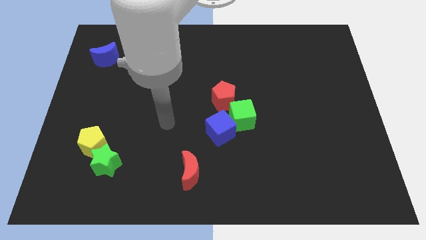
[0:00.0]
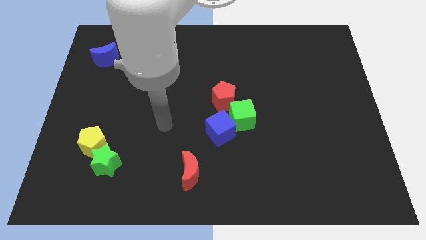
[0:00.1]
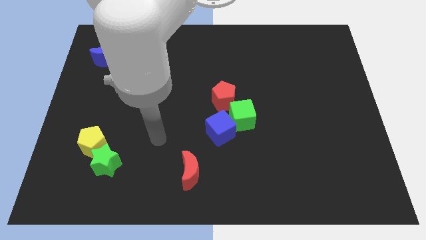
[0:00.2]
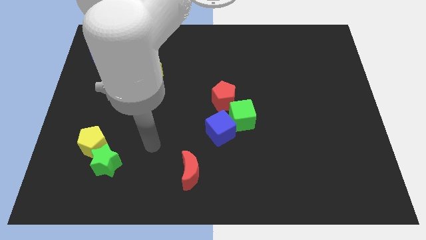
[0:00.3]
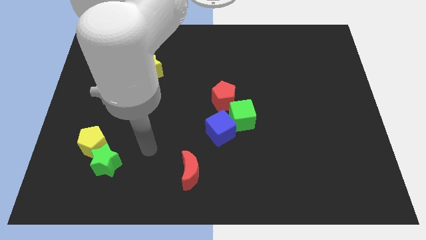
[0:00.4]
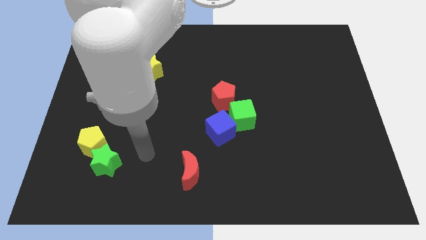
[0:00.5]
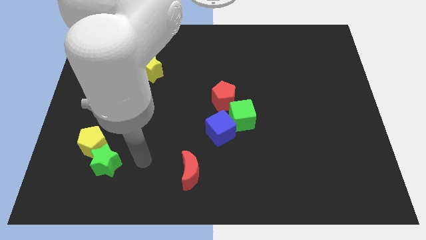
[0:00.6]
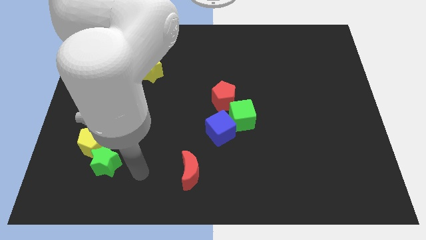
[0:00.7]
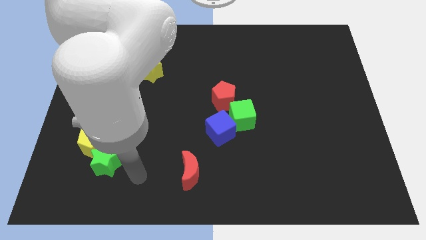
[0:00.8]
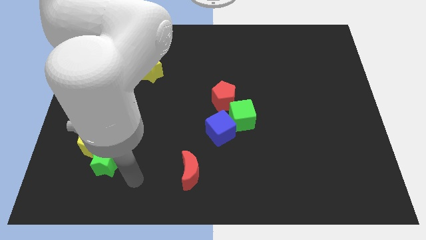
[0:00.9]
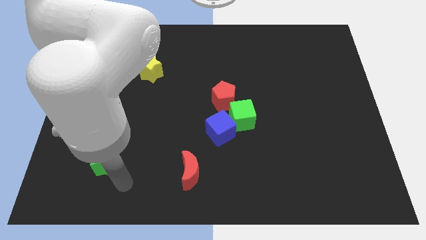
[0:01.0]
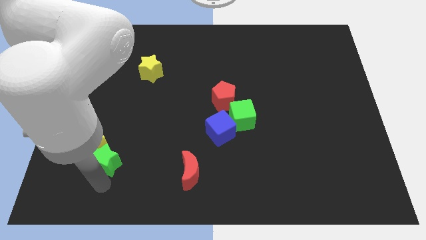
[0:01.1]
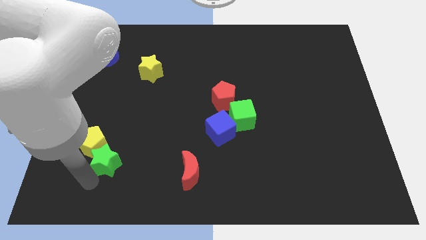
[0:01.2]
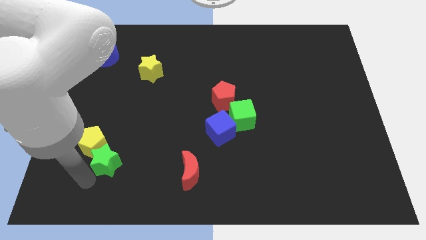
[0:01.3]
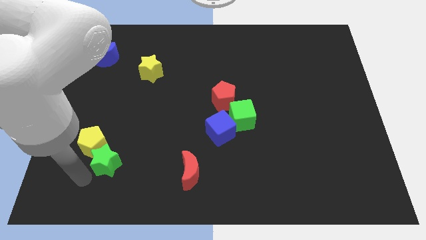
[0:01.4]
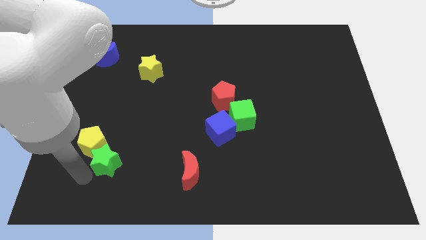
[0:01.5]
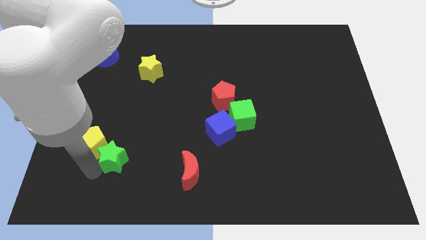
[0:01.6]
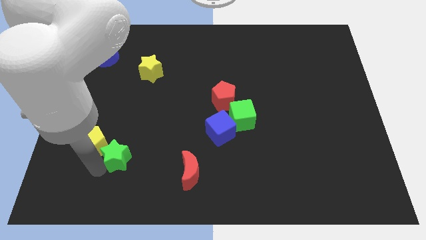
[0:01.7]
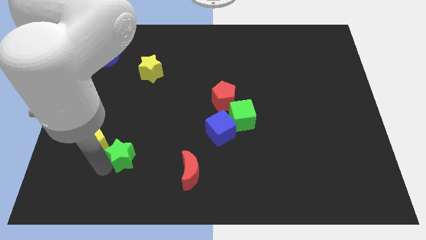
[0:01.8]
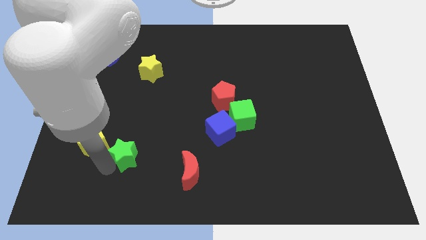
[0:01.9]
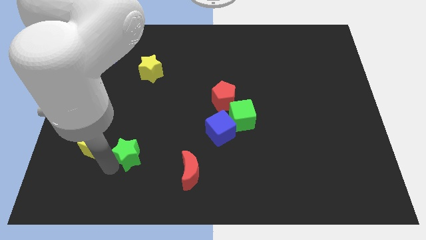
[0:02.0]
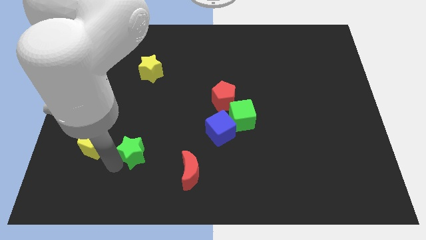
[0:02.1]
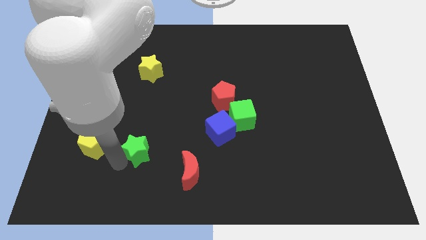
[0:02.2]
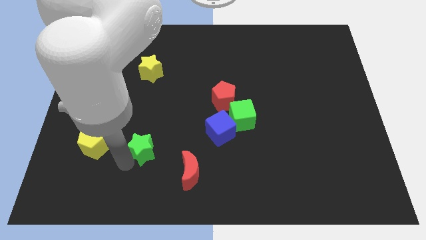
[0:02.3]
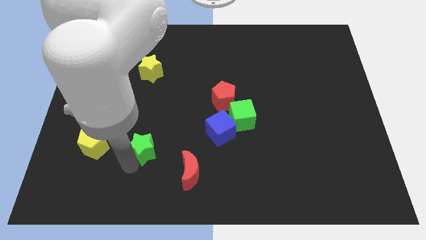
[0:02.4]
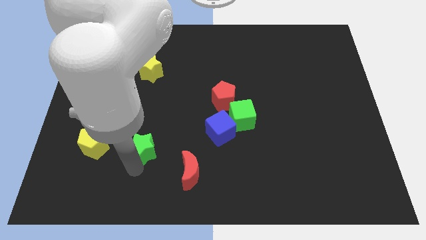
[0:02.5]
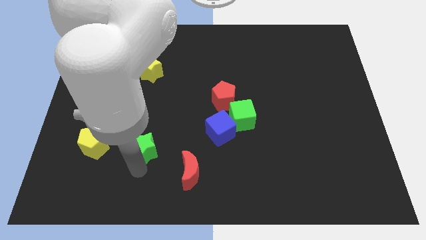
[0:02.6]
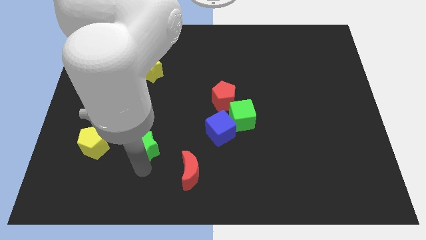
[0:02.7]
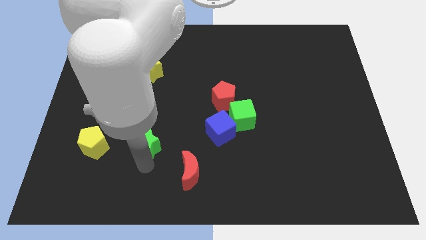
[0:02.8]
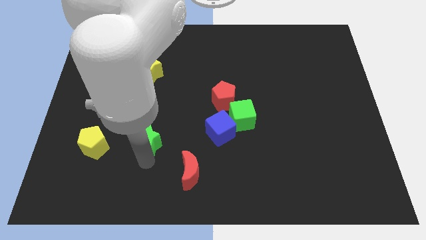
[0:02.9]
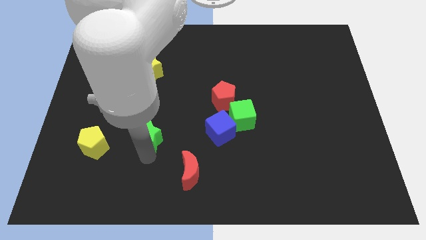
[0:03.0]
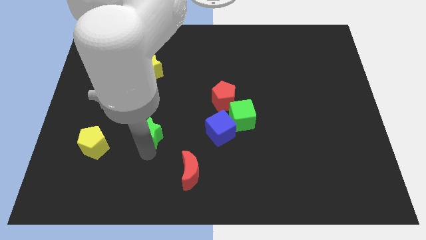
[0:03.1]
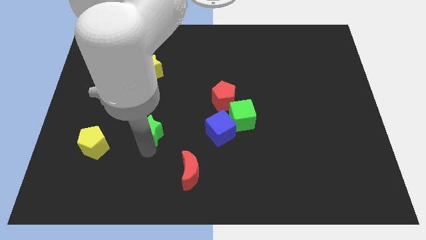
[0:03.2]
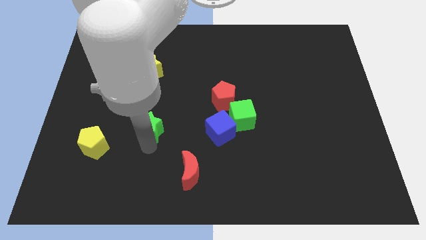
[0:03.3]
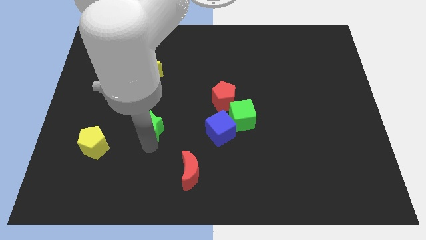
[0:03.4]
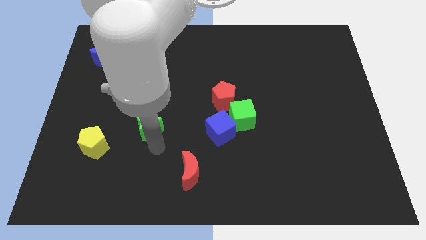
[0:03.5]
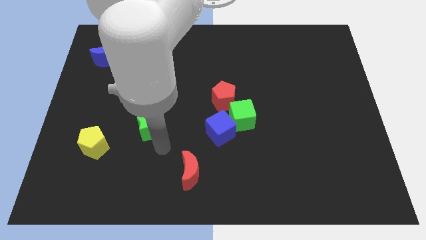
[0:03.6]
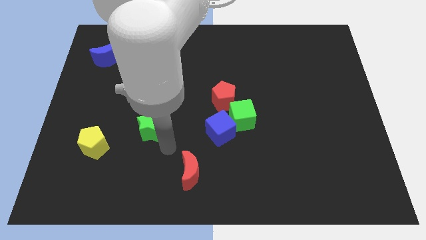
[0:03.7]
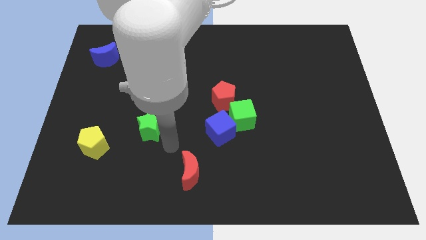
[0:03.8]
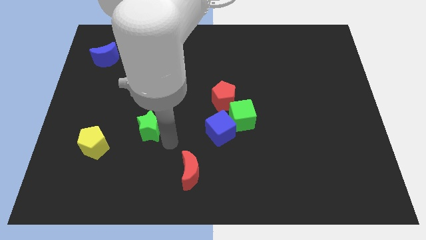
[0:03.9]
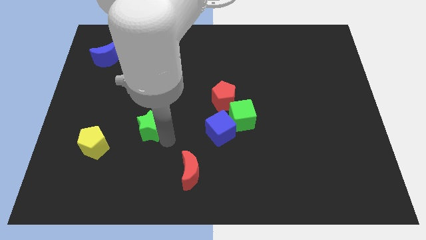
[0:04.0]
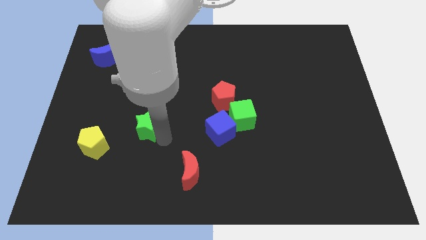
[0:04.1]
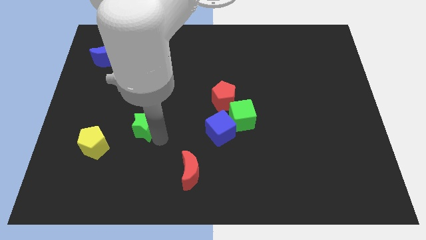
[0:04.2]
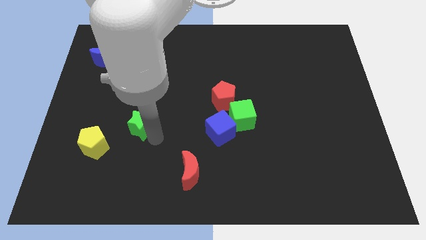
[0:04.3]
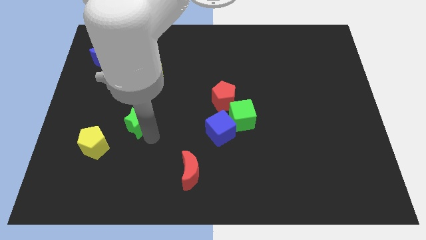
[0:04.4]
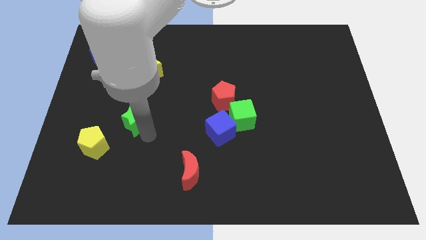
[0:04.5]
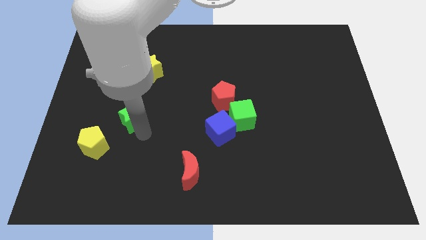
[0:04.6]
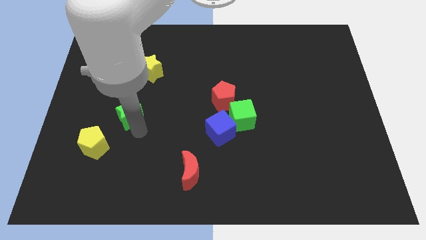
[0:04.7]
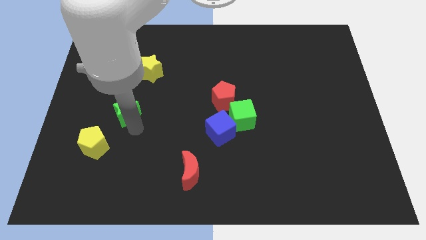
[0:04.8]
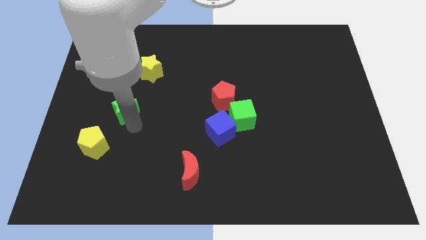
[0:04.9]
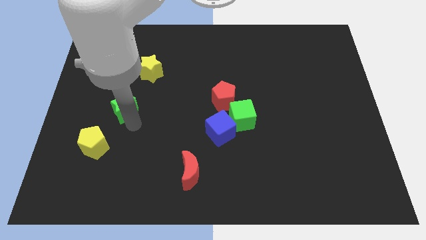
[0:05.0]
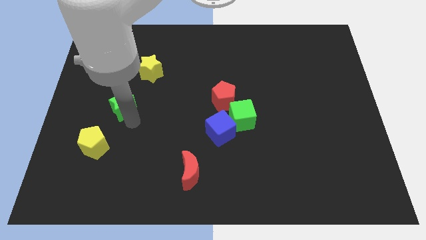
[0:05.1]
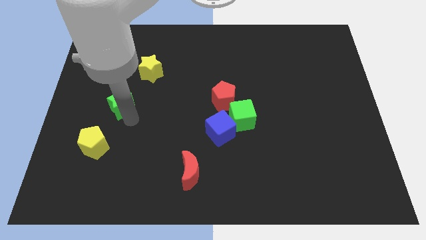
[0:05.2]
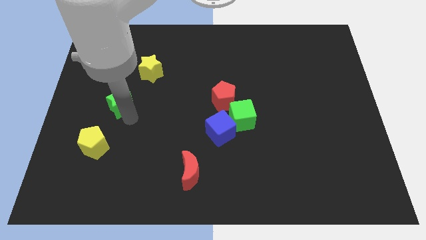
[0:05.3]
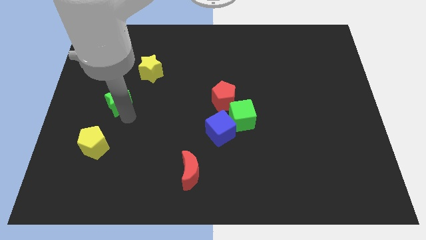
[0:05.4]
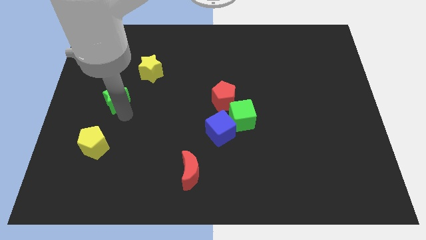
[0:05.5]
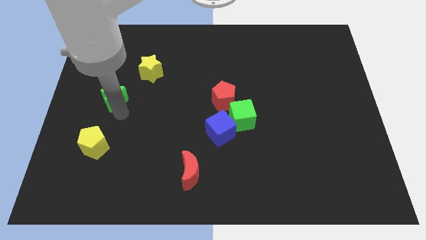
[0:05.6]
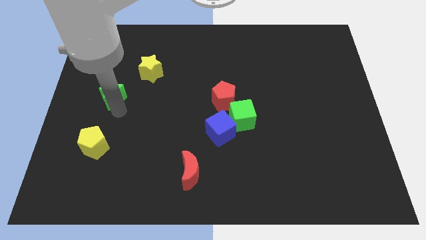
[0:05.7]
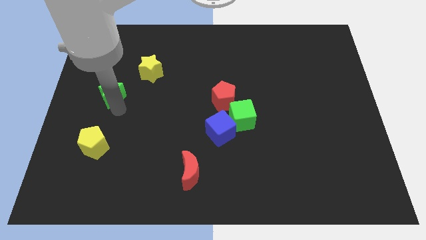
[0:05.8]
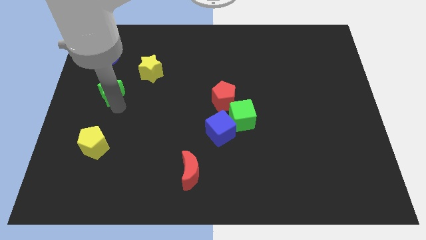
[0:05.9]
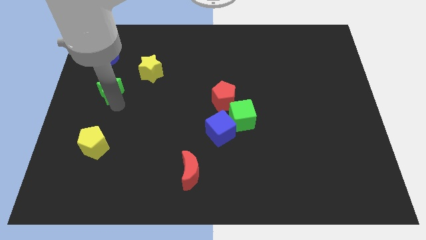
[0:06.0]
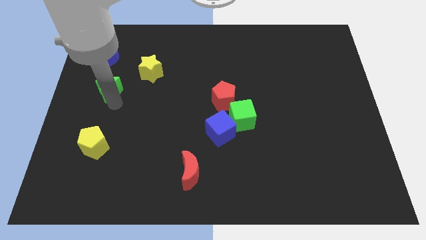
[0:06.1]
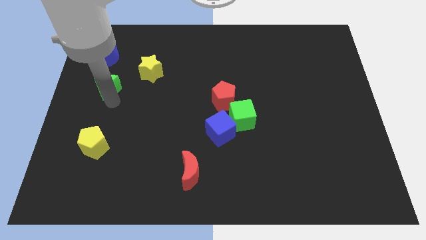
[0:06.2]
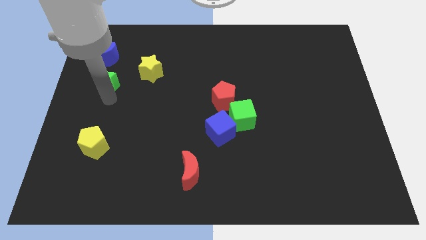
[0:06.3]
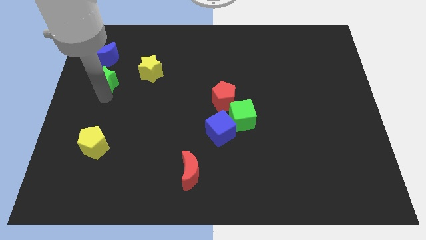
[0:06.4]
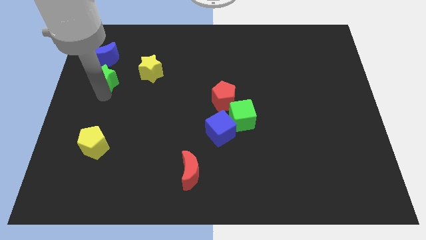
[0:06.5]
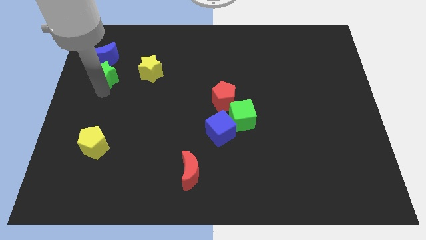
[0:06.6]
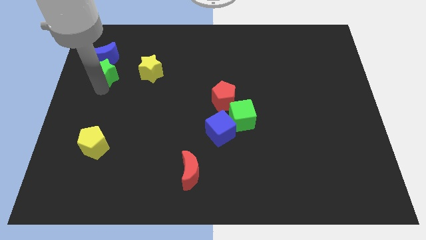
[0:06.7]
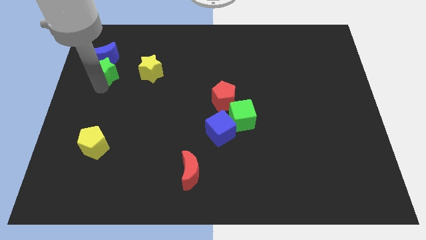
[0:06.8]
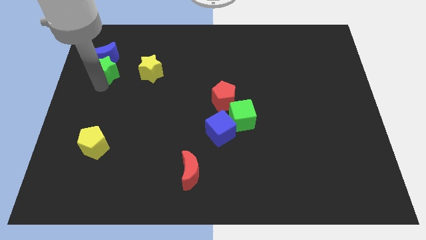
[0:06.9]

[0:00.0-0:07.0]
push the green star close to the blue moon

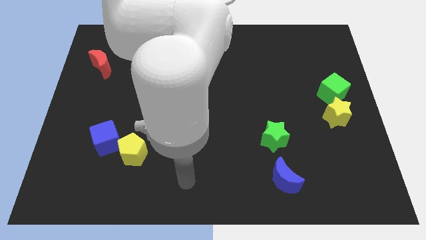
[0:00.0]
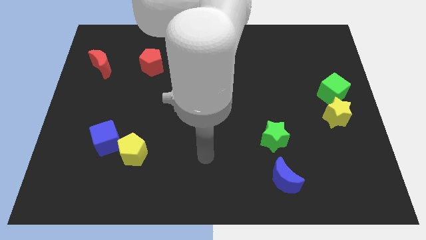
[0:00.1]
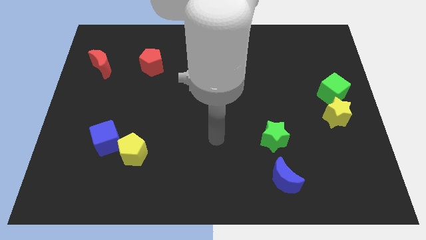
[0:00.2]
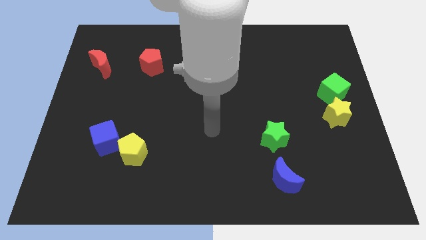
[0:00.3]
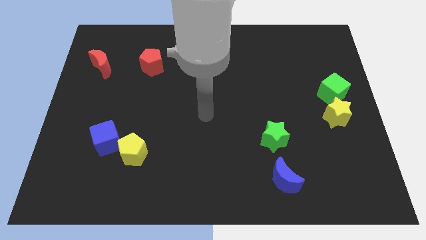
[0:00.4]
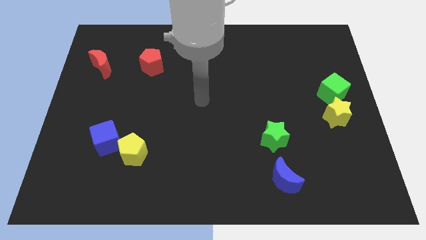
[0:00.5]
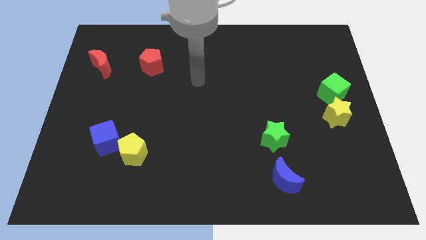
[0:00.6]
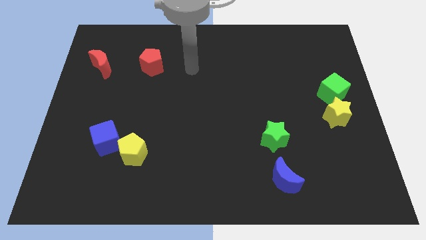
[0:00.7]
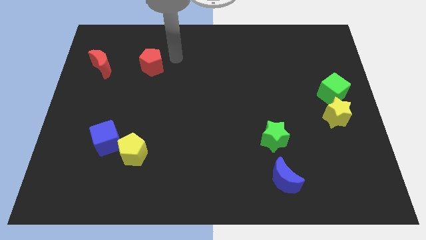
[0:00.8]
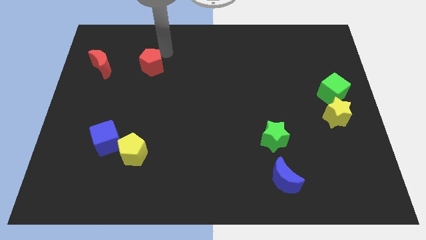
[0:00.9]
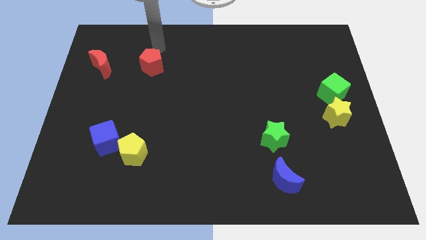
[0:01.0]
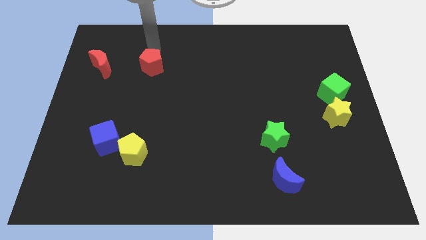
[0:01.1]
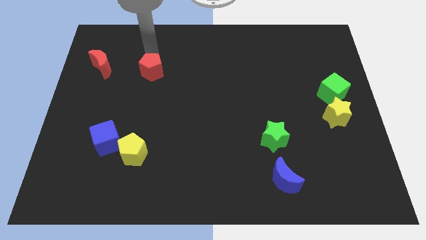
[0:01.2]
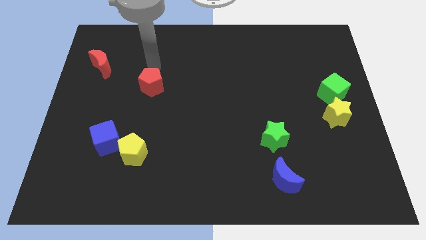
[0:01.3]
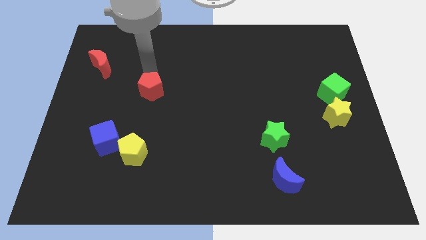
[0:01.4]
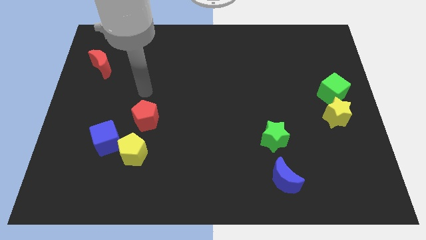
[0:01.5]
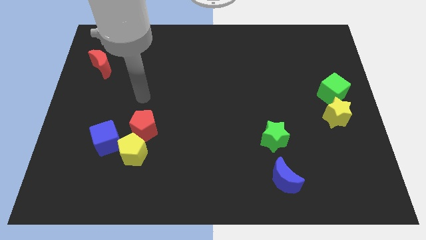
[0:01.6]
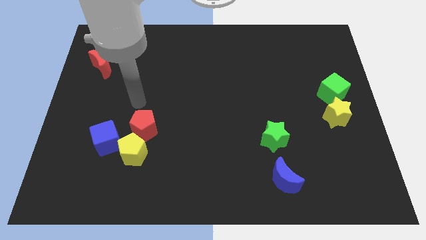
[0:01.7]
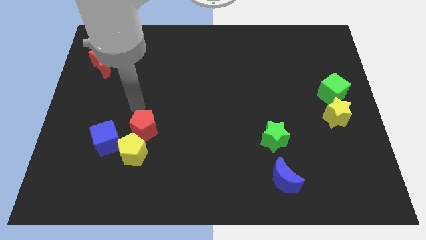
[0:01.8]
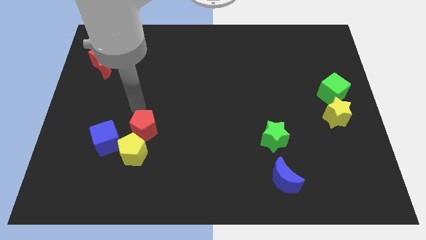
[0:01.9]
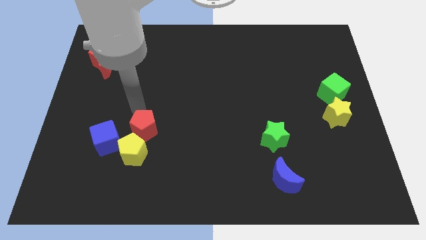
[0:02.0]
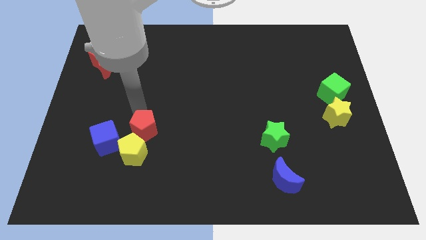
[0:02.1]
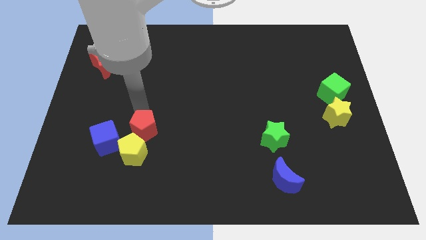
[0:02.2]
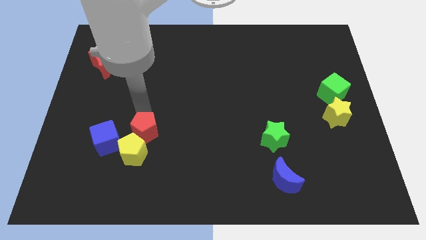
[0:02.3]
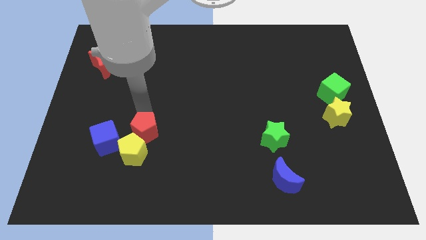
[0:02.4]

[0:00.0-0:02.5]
slide the red pentagon next to the yellow pentagon
